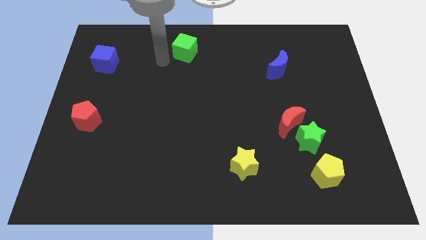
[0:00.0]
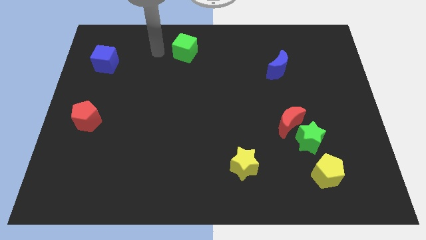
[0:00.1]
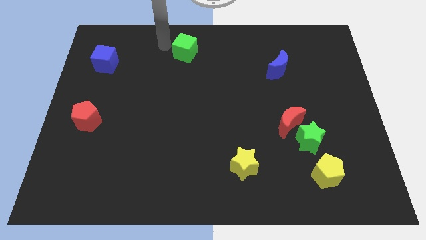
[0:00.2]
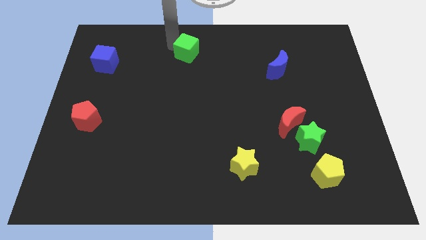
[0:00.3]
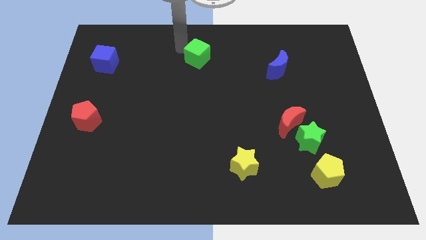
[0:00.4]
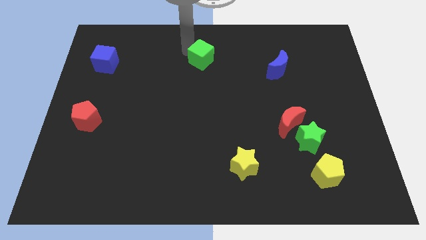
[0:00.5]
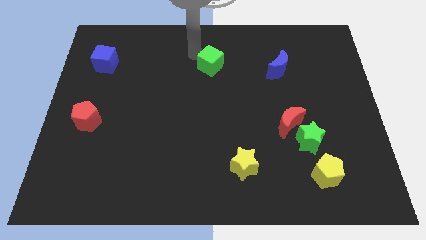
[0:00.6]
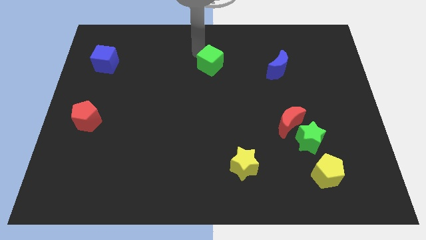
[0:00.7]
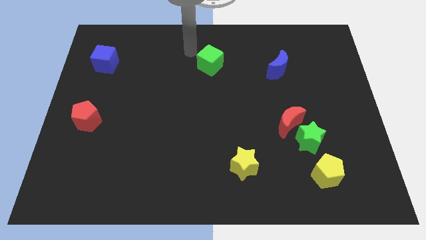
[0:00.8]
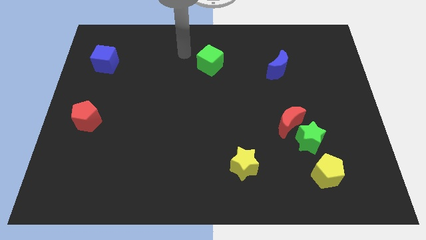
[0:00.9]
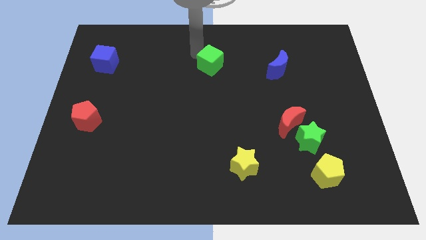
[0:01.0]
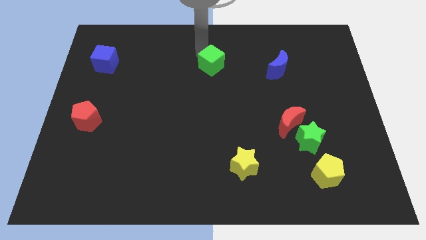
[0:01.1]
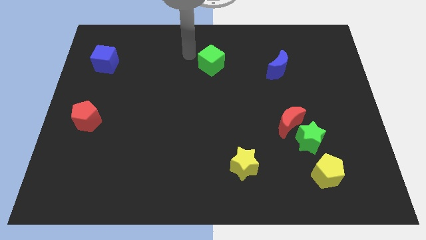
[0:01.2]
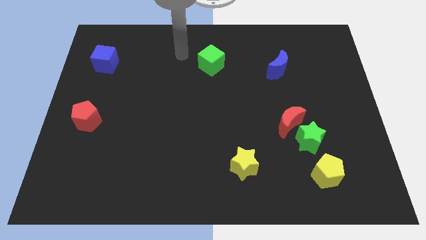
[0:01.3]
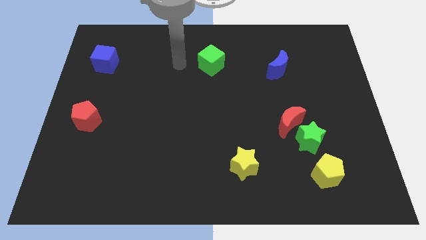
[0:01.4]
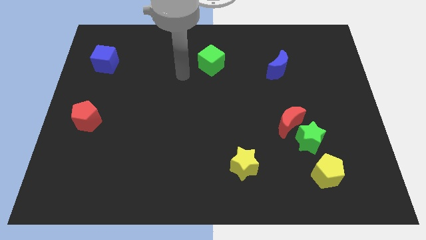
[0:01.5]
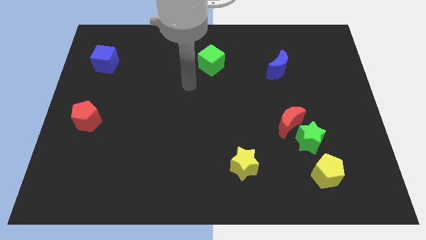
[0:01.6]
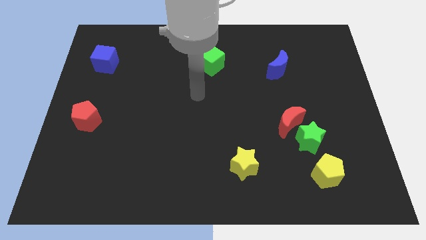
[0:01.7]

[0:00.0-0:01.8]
slide the green cube slightly to the right

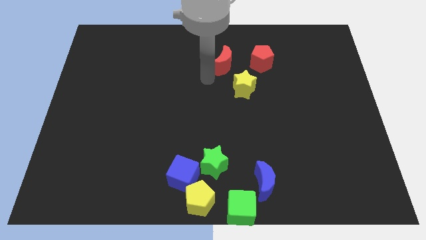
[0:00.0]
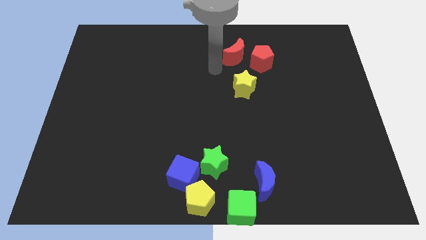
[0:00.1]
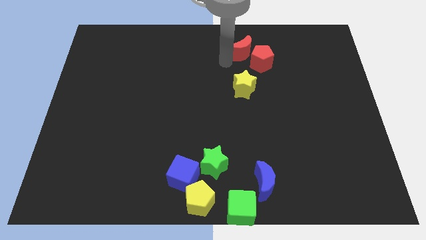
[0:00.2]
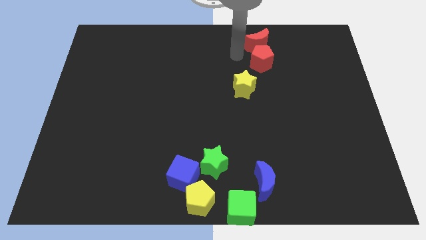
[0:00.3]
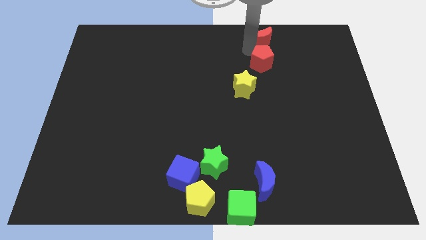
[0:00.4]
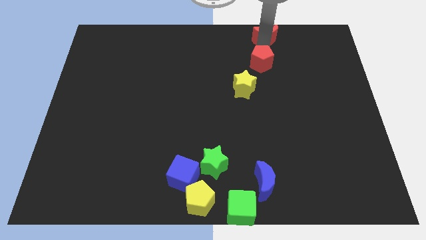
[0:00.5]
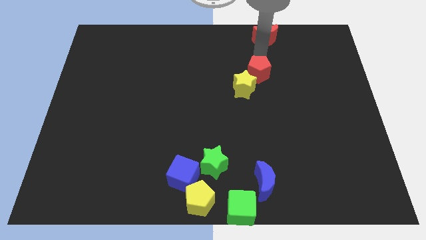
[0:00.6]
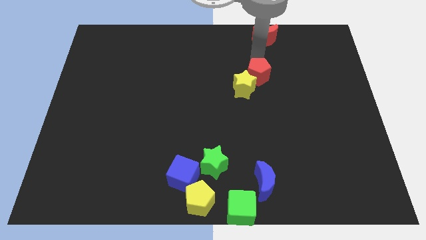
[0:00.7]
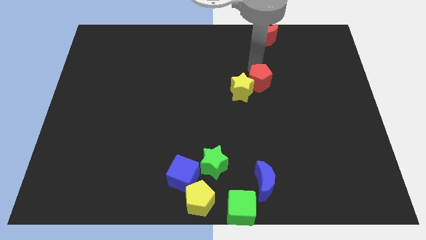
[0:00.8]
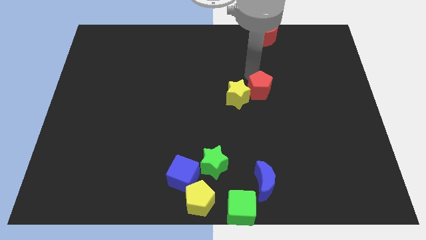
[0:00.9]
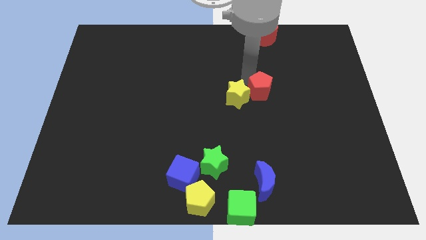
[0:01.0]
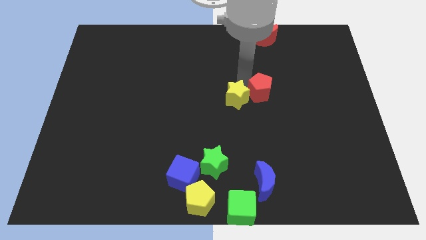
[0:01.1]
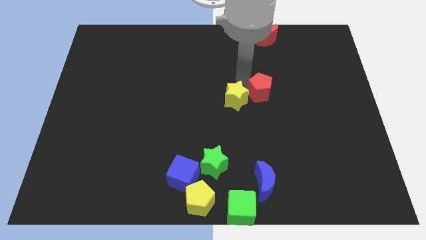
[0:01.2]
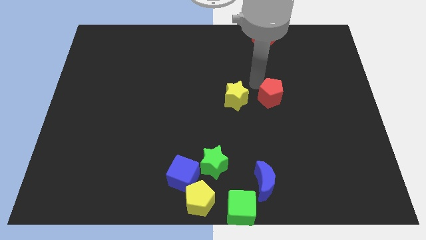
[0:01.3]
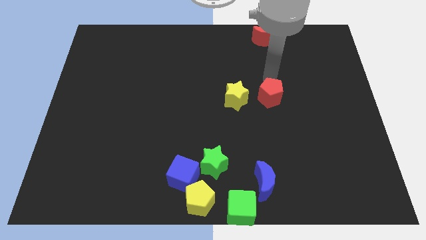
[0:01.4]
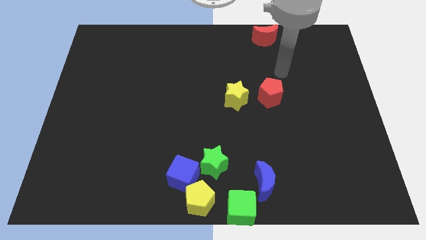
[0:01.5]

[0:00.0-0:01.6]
place red pentagon to the right of yellow star

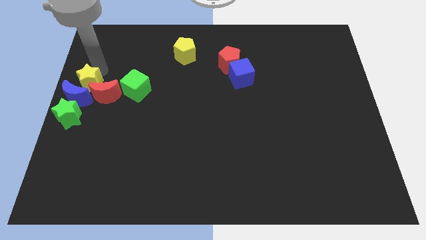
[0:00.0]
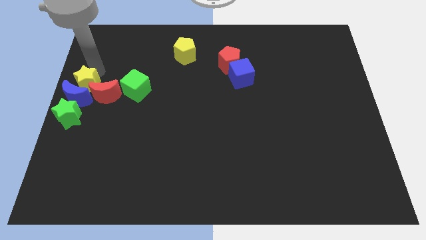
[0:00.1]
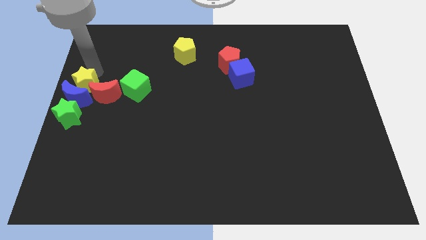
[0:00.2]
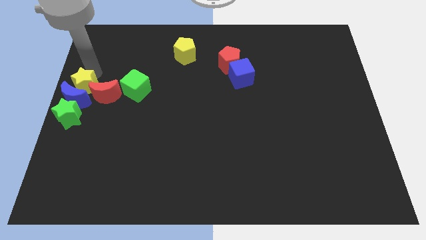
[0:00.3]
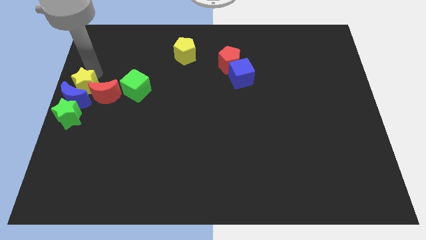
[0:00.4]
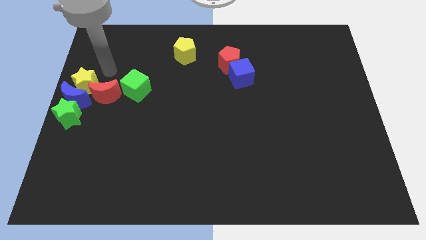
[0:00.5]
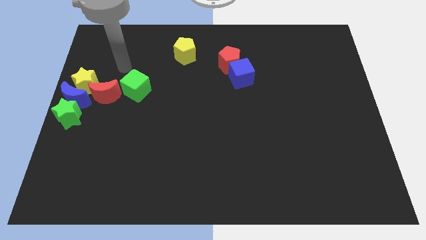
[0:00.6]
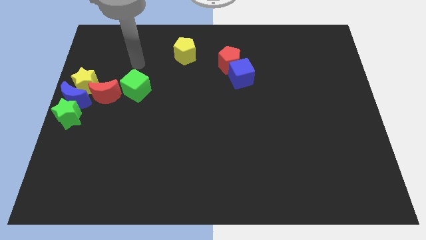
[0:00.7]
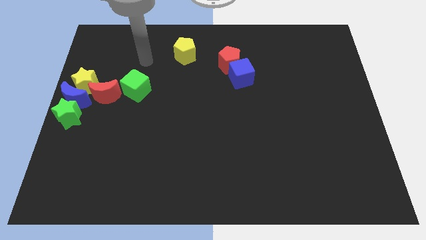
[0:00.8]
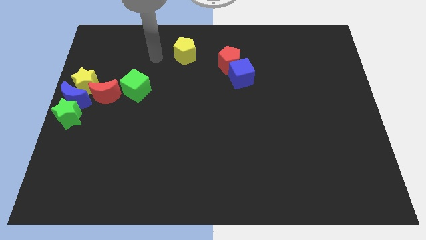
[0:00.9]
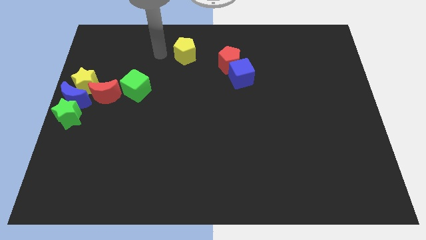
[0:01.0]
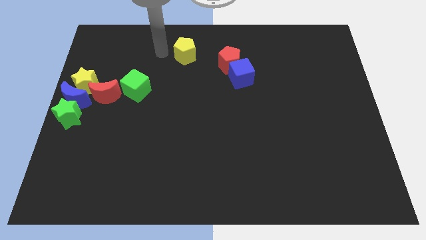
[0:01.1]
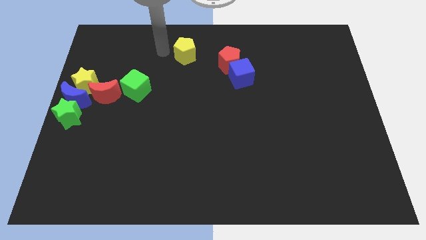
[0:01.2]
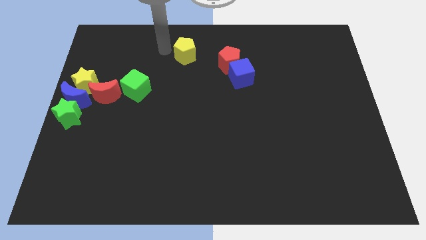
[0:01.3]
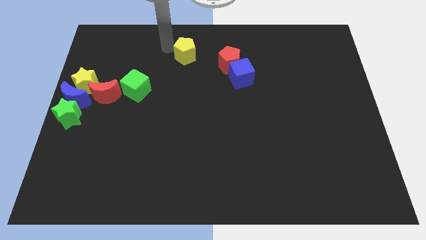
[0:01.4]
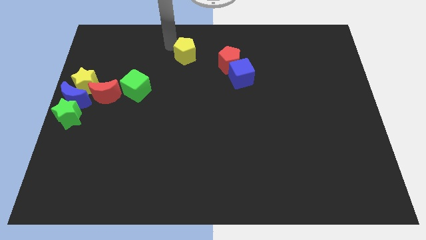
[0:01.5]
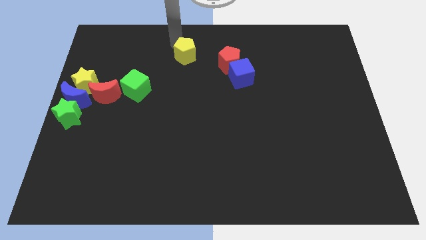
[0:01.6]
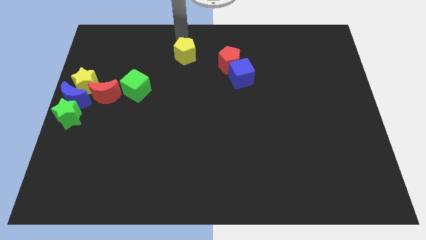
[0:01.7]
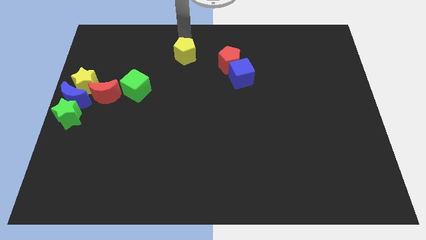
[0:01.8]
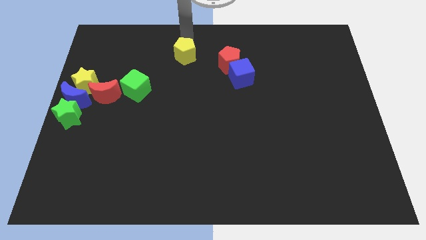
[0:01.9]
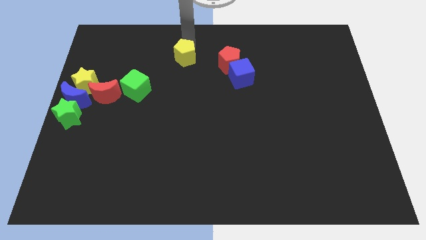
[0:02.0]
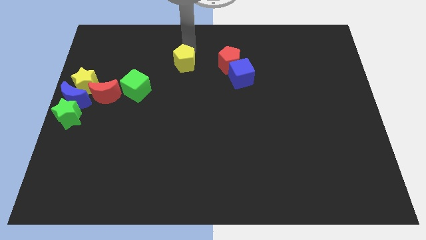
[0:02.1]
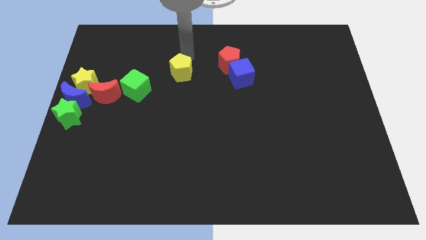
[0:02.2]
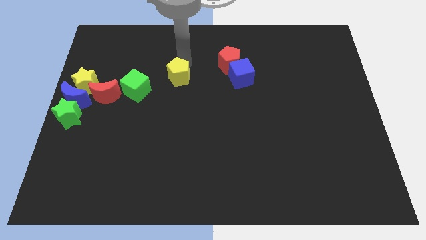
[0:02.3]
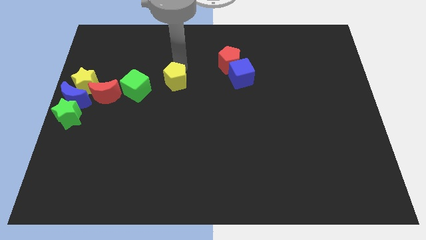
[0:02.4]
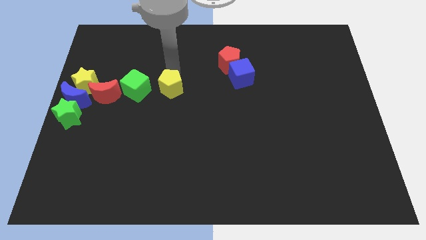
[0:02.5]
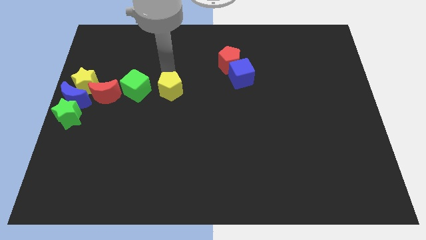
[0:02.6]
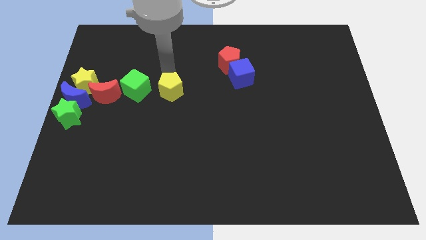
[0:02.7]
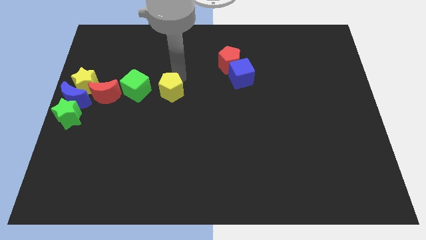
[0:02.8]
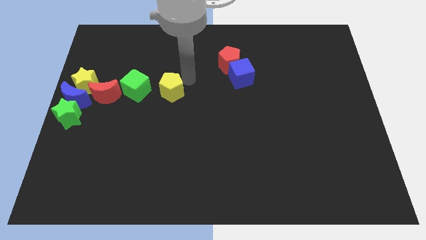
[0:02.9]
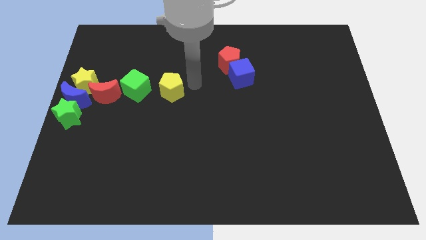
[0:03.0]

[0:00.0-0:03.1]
move the yellow pentagon parallel right to the green cube

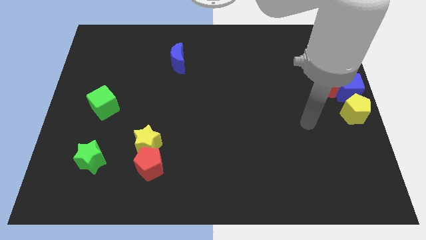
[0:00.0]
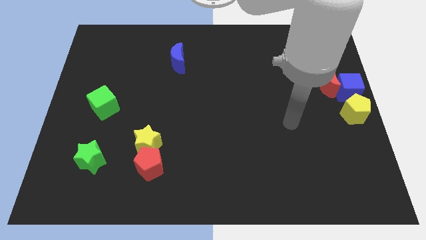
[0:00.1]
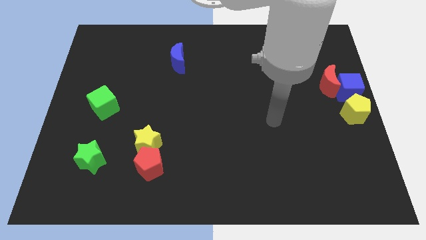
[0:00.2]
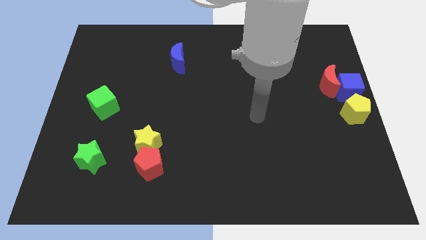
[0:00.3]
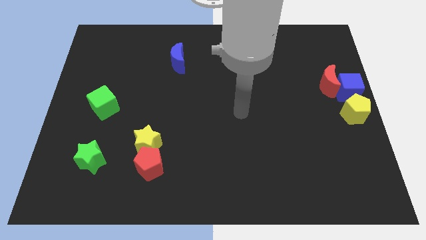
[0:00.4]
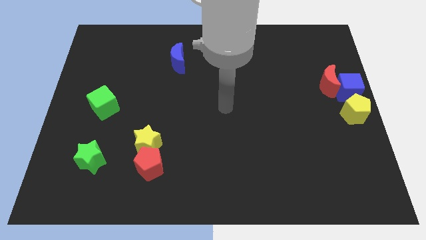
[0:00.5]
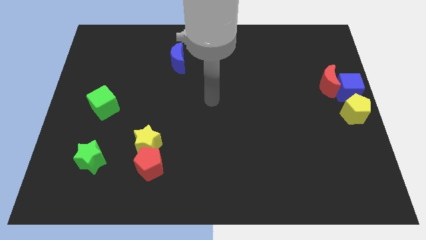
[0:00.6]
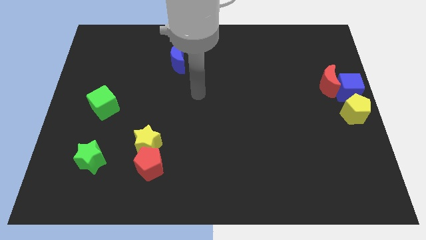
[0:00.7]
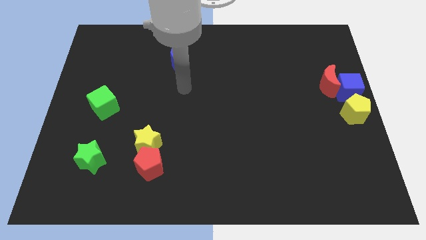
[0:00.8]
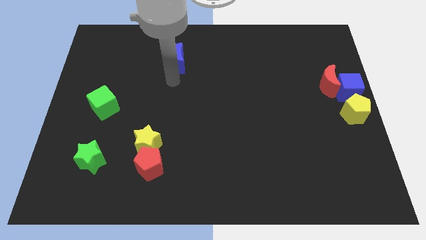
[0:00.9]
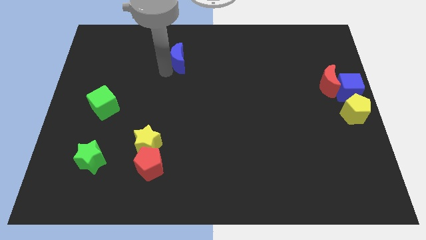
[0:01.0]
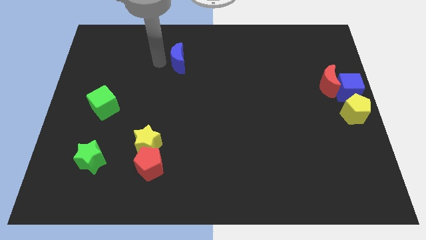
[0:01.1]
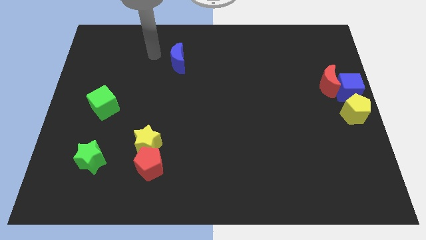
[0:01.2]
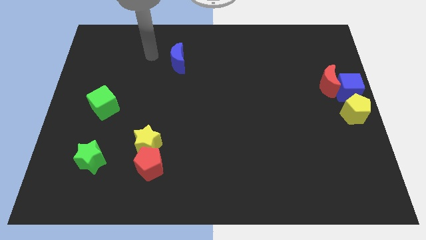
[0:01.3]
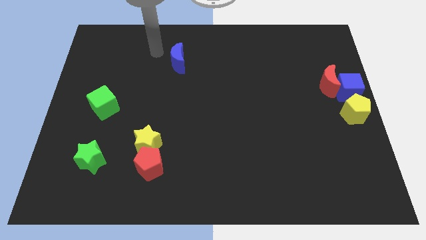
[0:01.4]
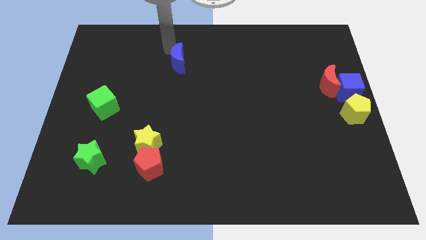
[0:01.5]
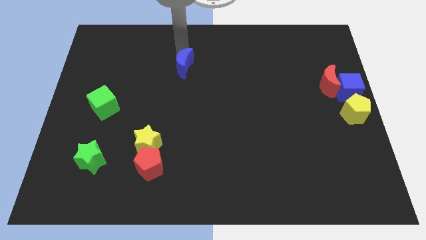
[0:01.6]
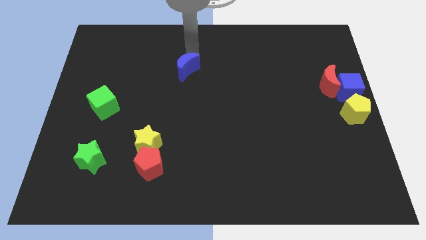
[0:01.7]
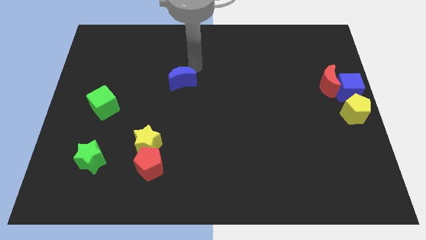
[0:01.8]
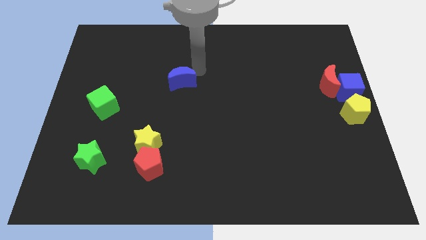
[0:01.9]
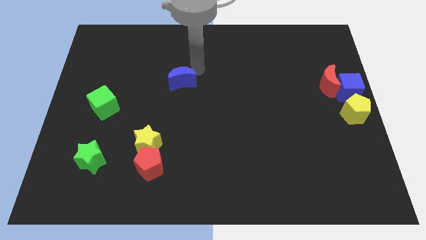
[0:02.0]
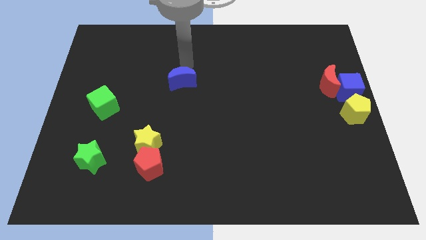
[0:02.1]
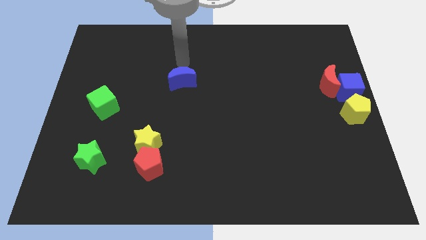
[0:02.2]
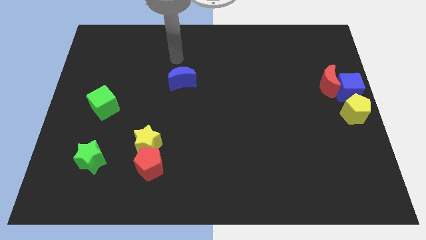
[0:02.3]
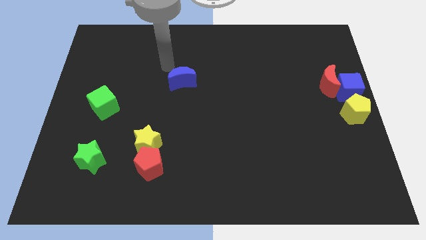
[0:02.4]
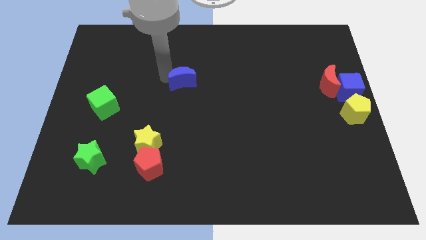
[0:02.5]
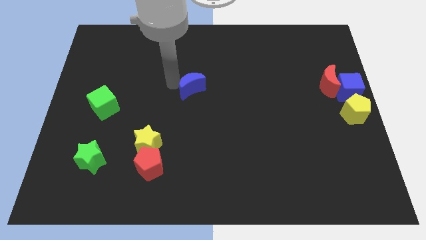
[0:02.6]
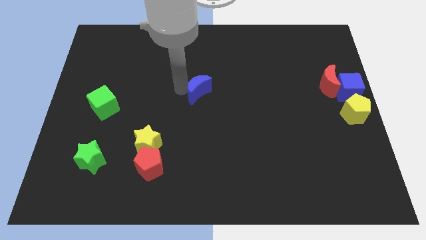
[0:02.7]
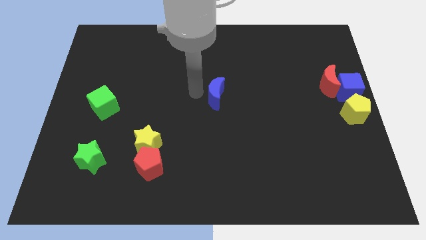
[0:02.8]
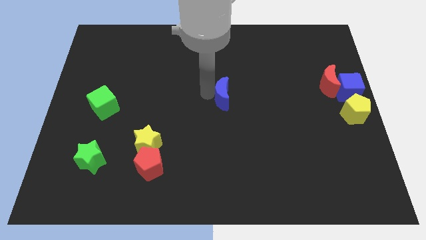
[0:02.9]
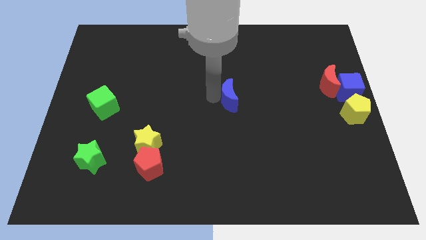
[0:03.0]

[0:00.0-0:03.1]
push blue moon to the center
